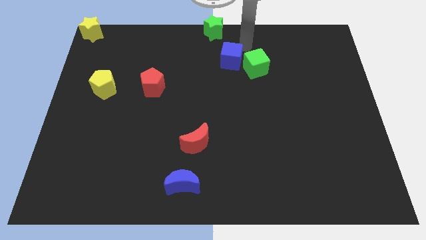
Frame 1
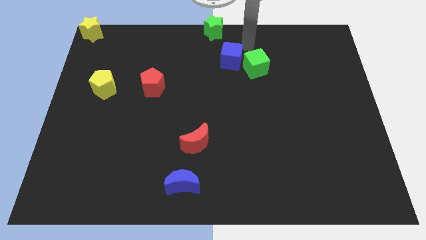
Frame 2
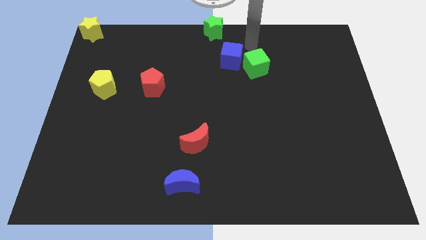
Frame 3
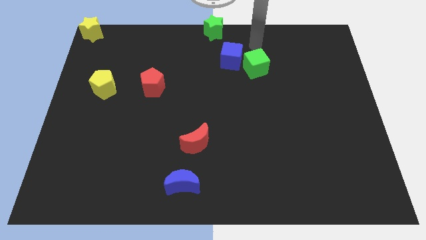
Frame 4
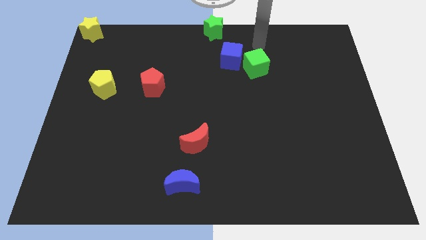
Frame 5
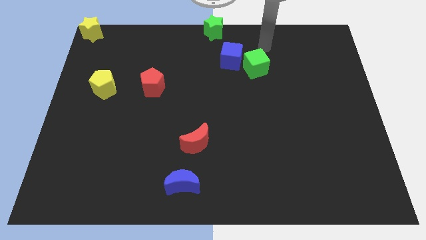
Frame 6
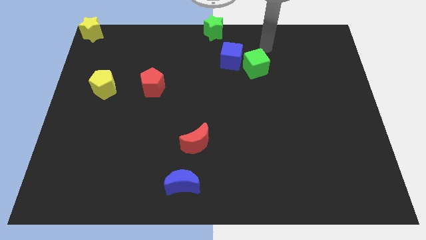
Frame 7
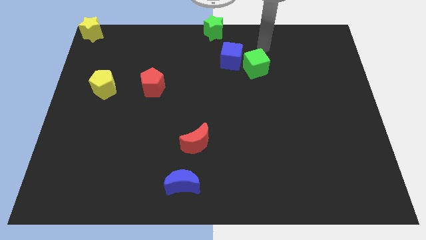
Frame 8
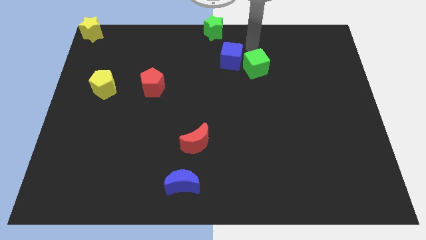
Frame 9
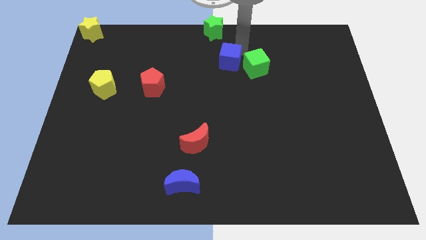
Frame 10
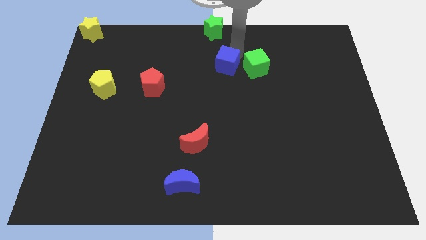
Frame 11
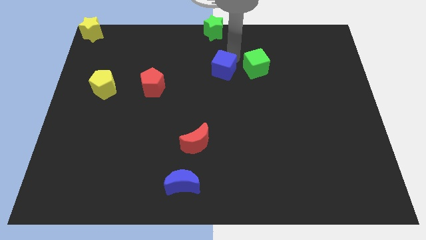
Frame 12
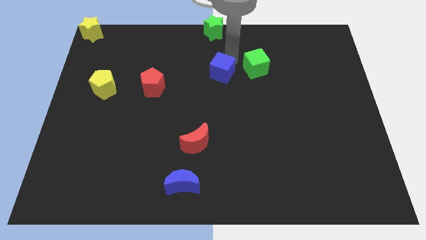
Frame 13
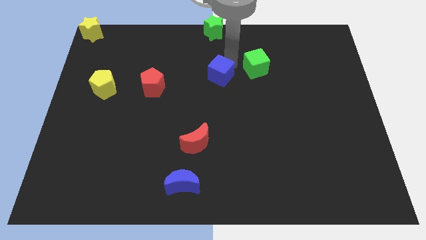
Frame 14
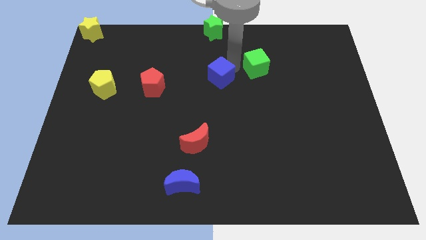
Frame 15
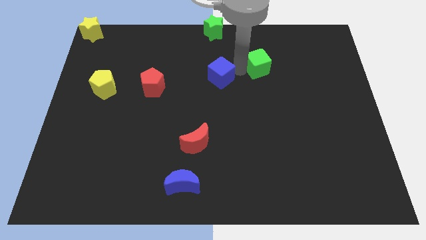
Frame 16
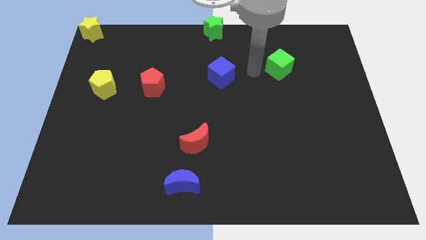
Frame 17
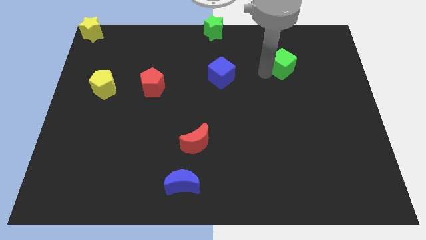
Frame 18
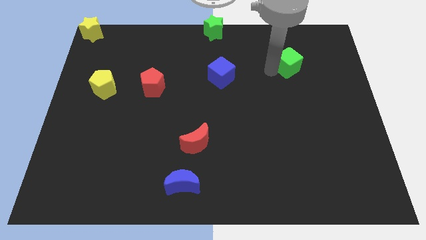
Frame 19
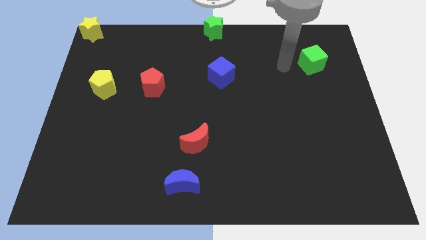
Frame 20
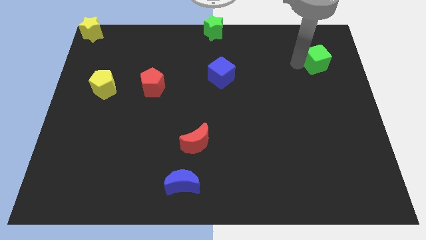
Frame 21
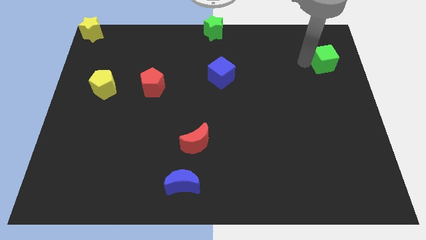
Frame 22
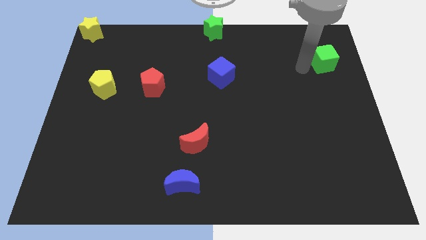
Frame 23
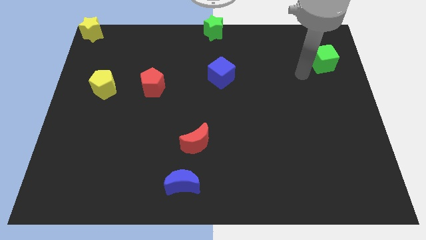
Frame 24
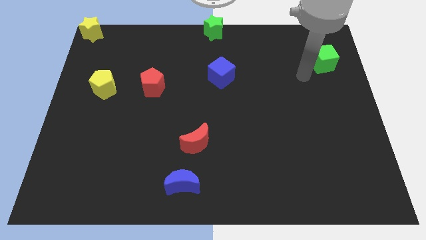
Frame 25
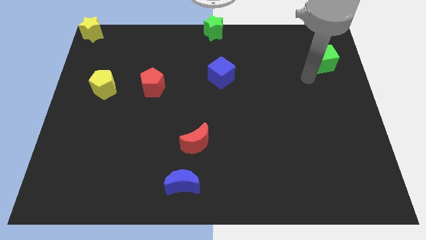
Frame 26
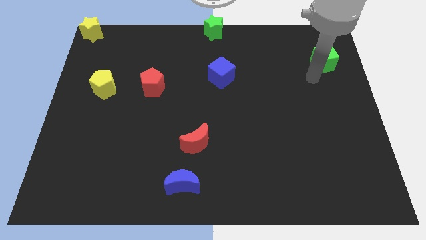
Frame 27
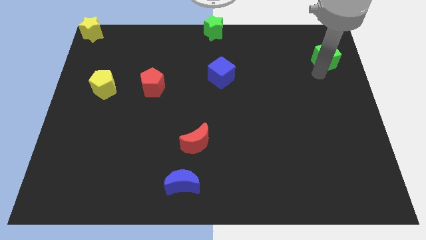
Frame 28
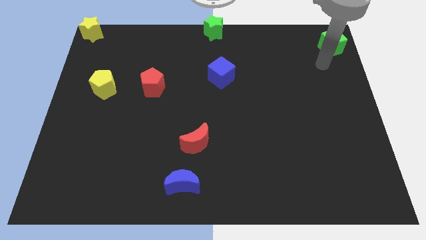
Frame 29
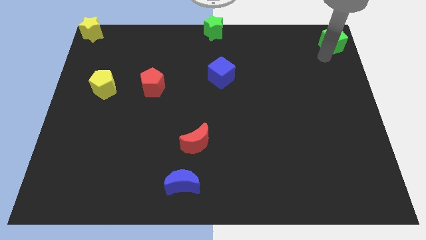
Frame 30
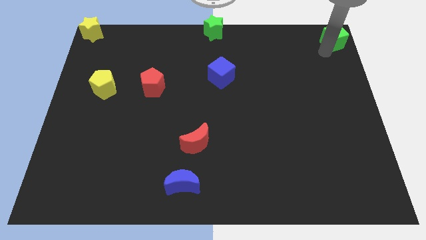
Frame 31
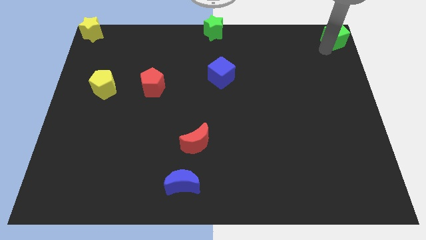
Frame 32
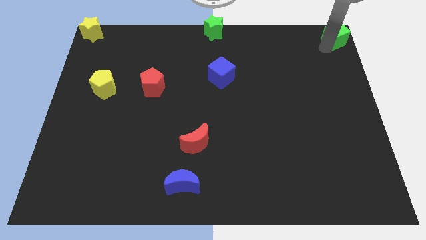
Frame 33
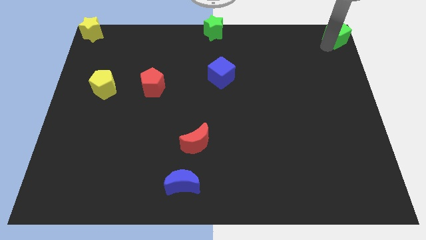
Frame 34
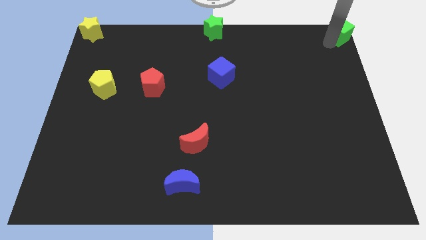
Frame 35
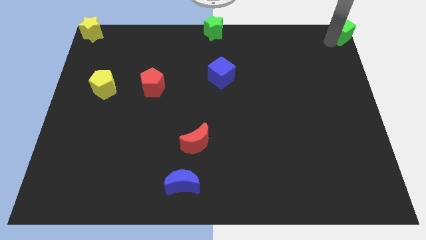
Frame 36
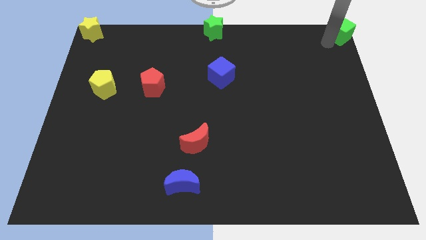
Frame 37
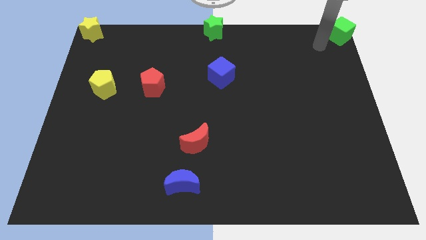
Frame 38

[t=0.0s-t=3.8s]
place green cube towards top right corner

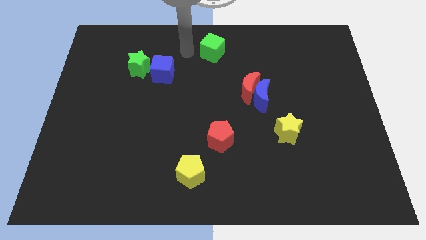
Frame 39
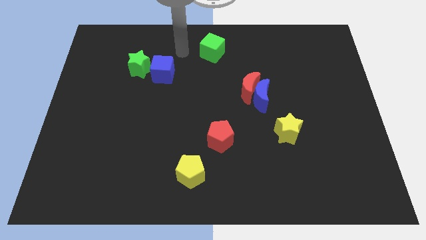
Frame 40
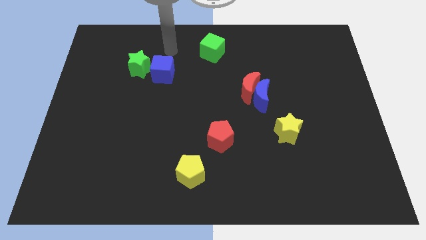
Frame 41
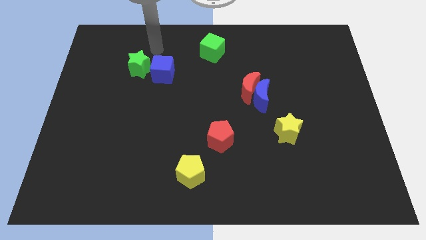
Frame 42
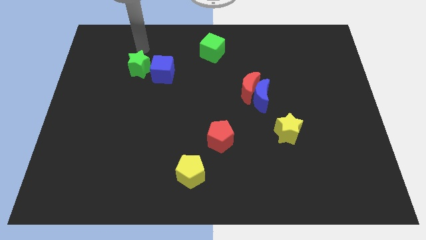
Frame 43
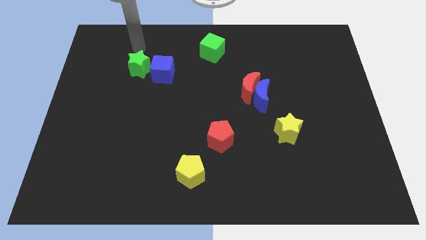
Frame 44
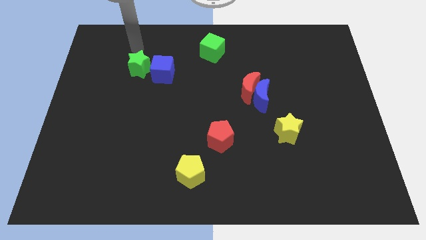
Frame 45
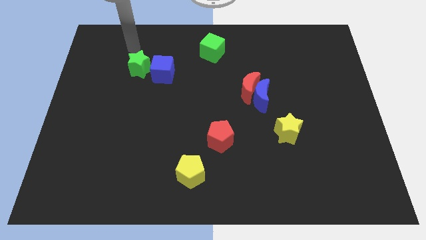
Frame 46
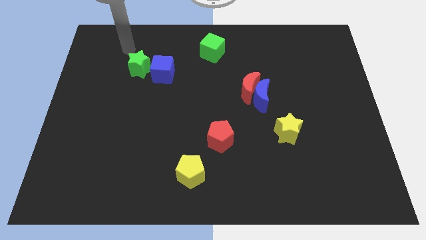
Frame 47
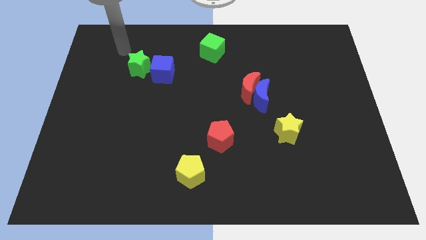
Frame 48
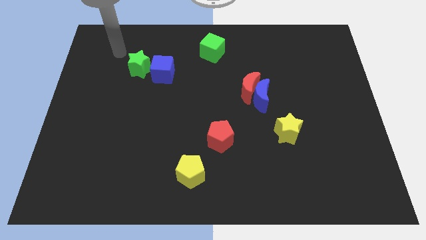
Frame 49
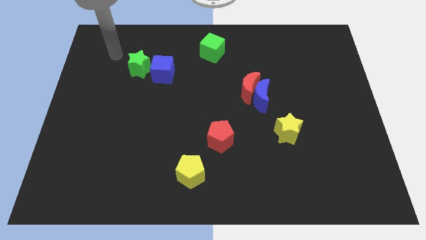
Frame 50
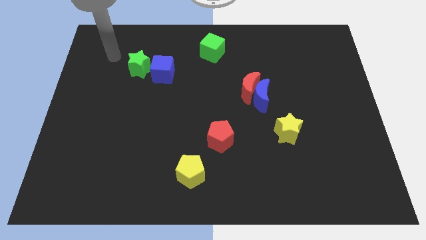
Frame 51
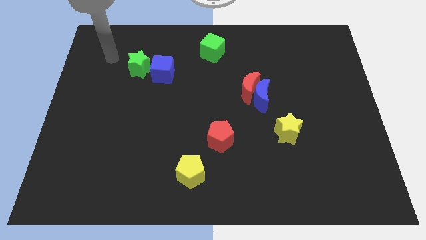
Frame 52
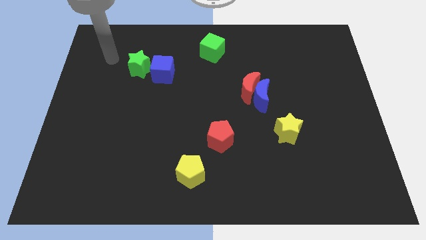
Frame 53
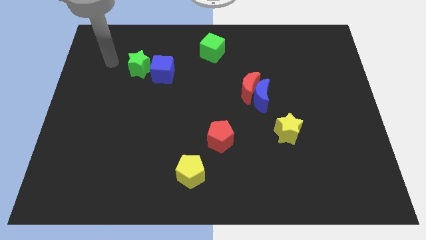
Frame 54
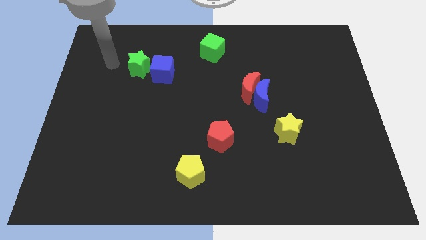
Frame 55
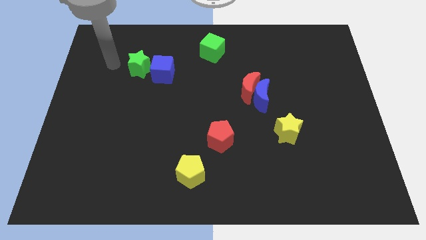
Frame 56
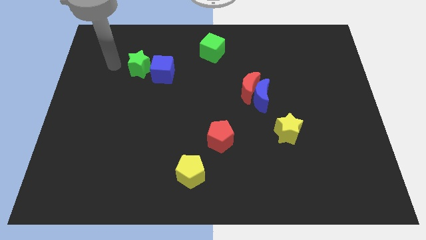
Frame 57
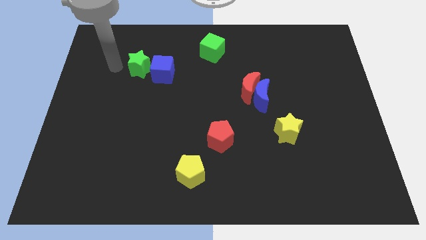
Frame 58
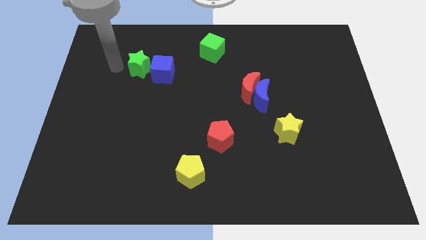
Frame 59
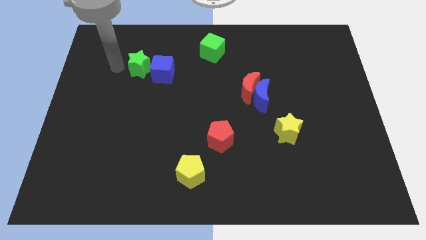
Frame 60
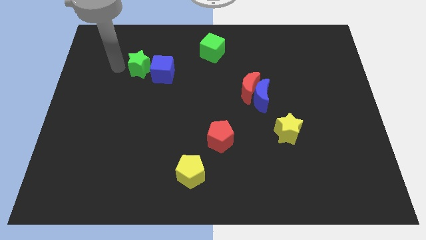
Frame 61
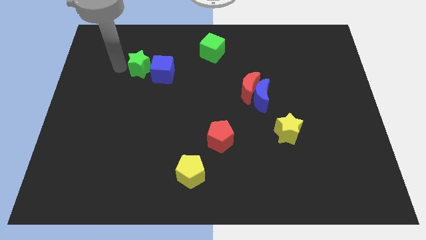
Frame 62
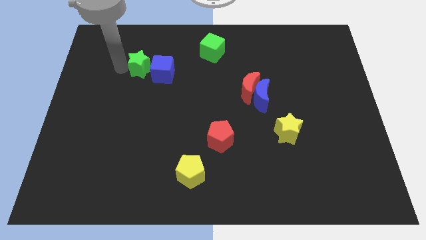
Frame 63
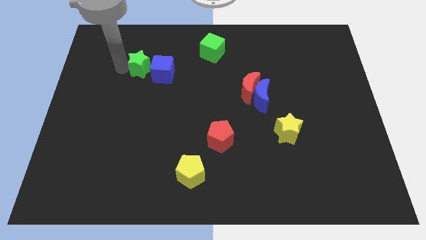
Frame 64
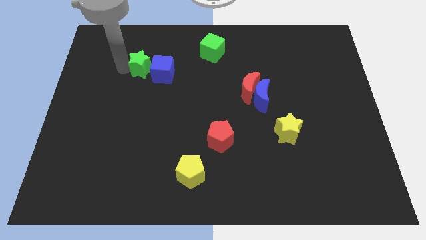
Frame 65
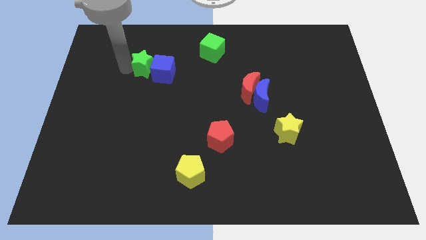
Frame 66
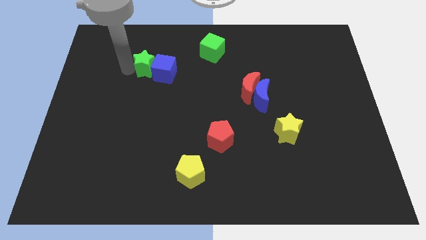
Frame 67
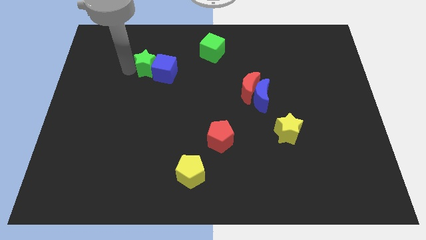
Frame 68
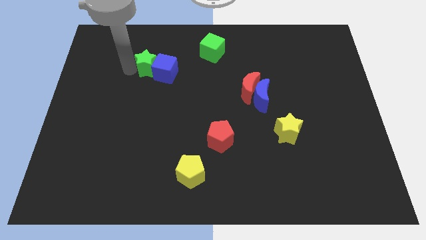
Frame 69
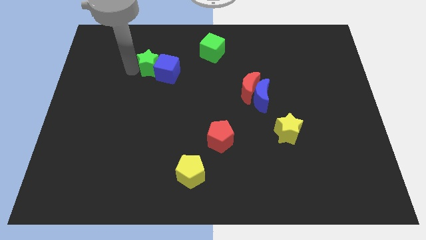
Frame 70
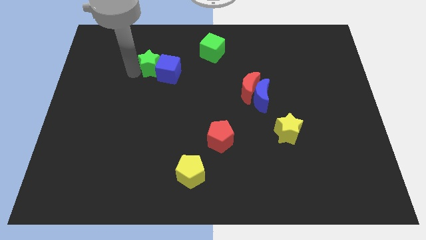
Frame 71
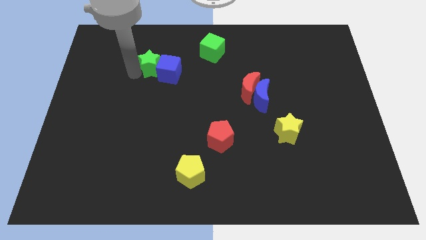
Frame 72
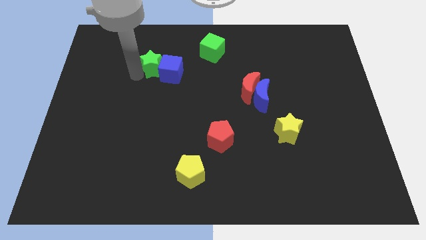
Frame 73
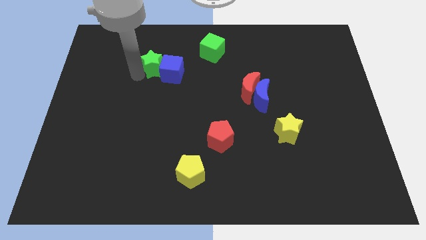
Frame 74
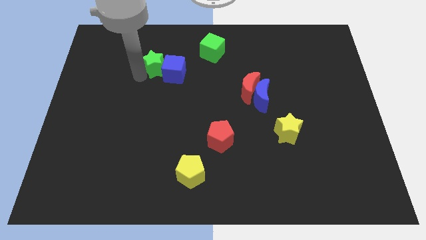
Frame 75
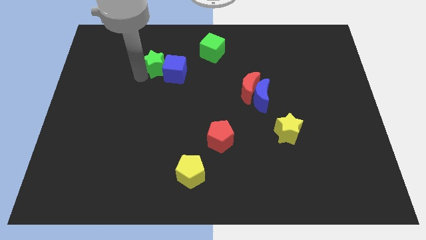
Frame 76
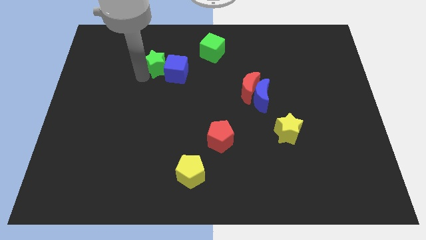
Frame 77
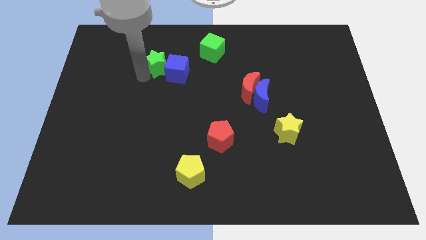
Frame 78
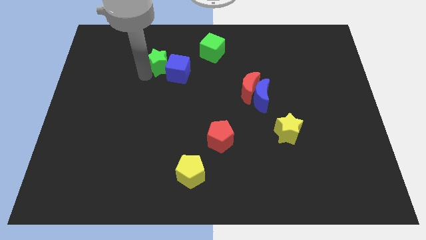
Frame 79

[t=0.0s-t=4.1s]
push the green star along with the blue cube slightly to the right

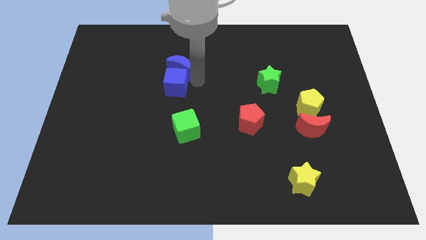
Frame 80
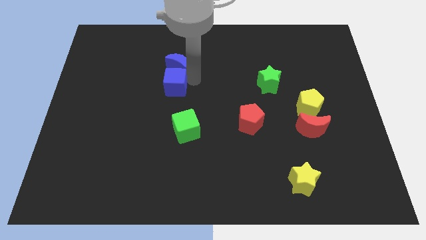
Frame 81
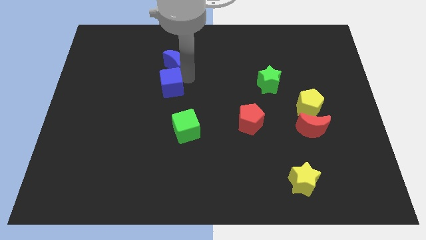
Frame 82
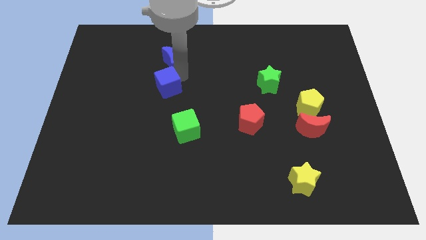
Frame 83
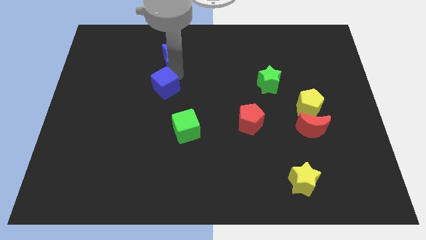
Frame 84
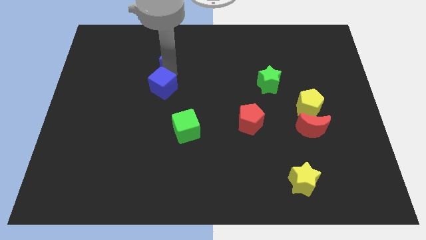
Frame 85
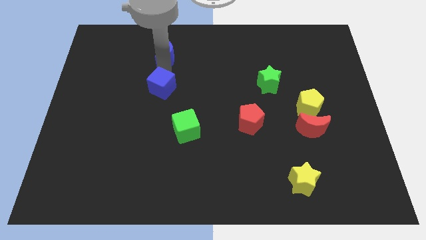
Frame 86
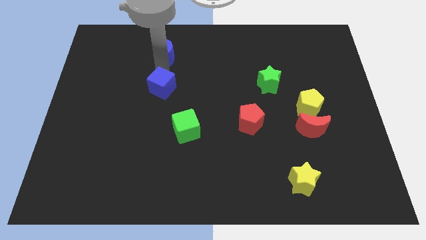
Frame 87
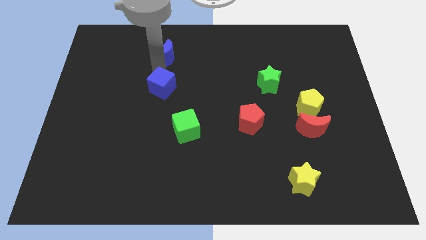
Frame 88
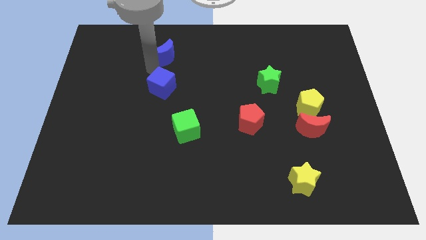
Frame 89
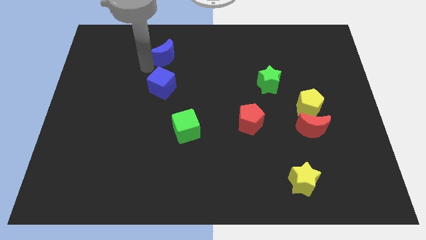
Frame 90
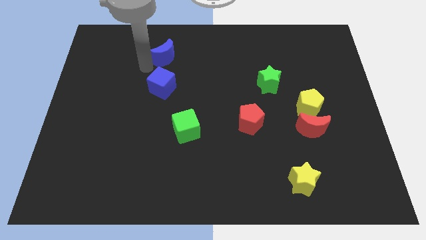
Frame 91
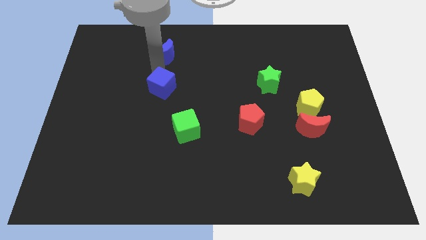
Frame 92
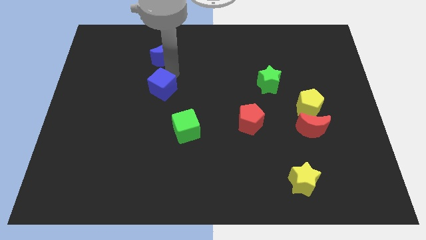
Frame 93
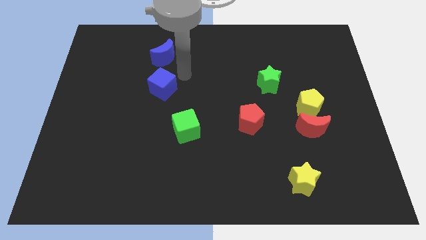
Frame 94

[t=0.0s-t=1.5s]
place both the blue blocks diagonally on the top left side of the green cube
